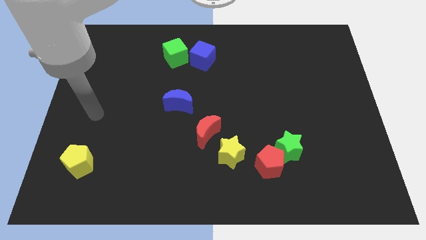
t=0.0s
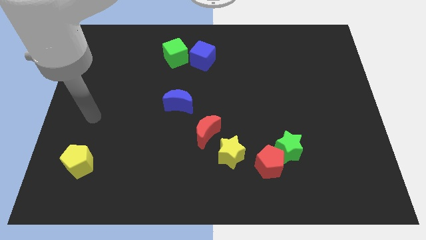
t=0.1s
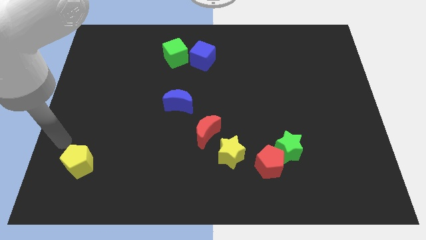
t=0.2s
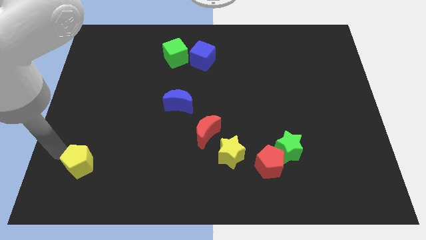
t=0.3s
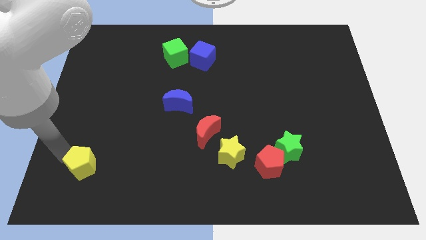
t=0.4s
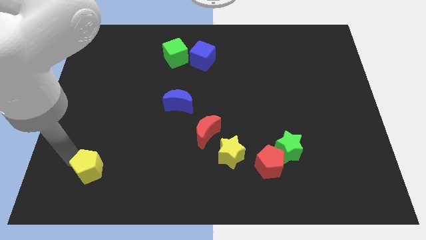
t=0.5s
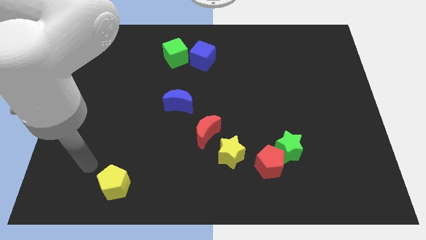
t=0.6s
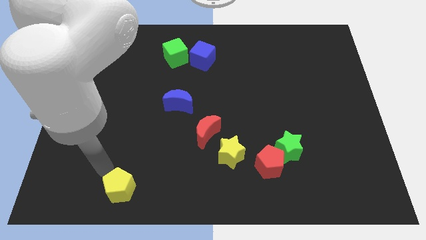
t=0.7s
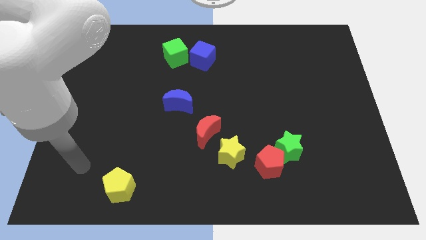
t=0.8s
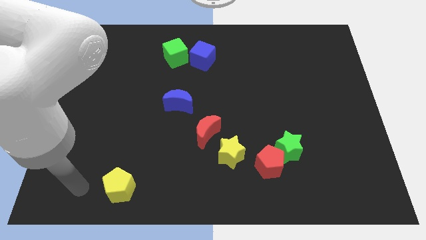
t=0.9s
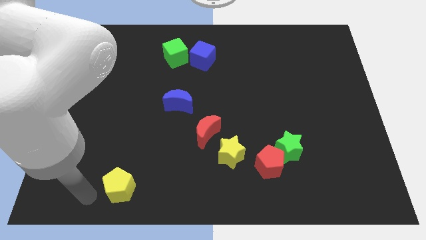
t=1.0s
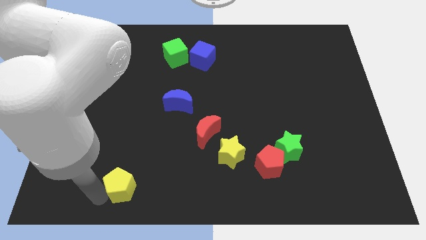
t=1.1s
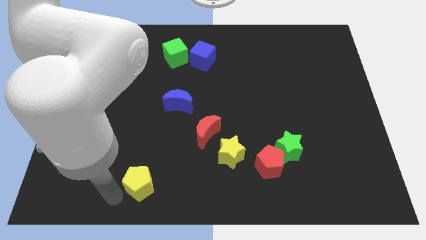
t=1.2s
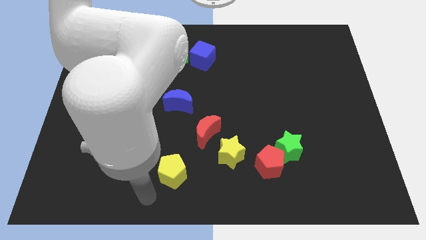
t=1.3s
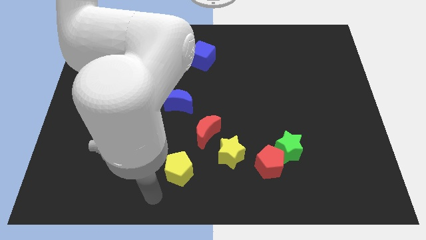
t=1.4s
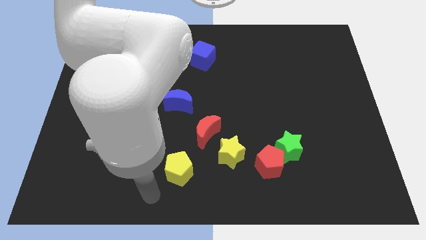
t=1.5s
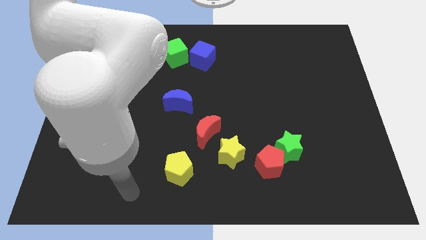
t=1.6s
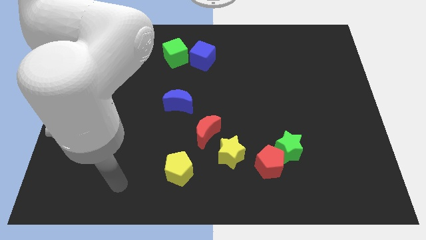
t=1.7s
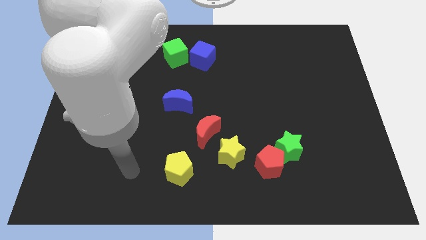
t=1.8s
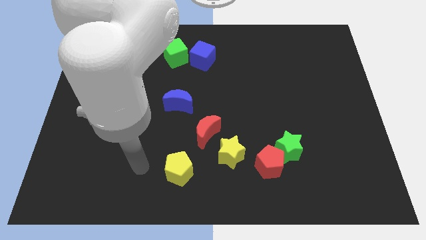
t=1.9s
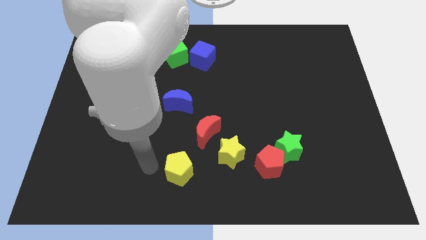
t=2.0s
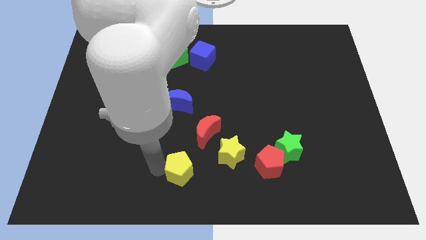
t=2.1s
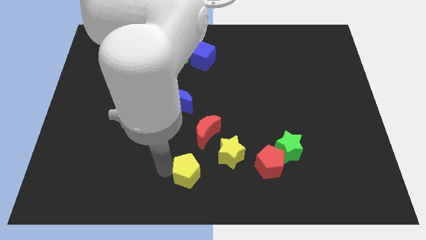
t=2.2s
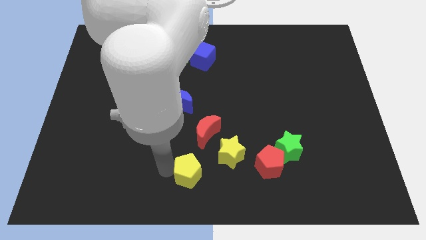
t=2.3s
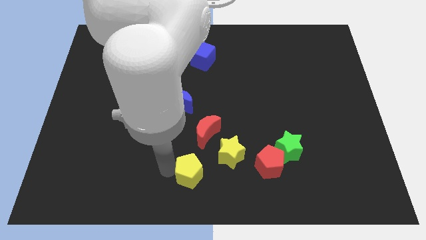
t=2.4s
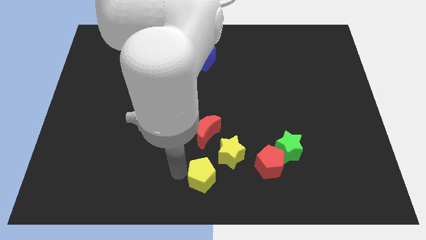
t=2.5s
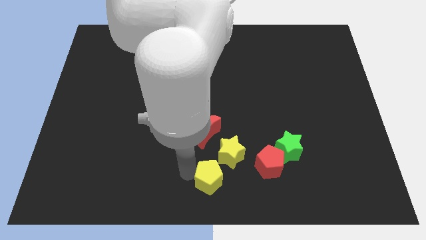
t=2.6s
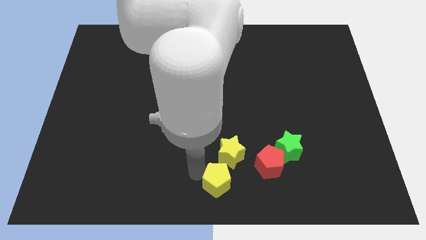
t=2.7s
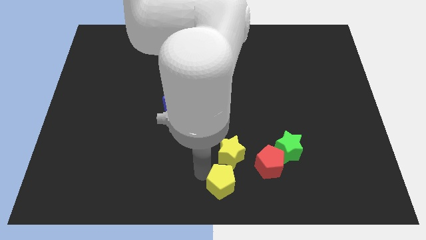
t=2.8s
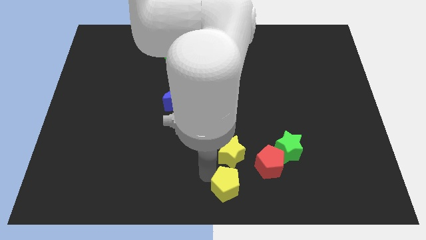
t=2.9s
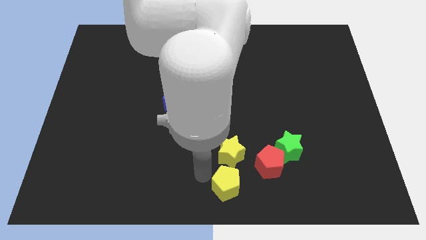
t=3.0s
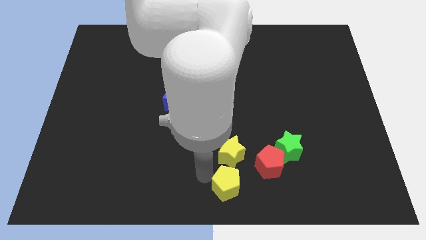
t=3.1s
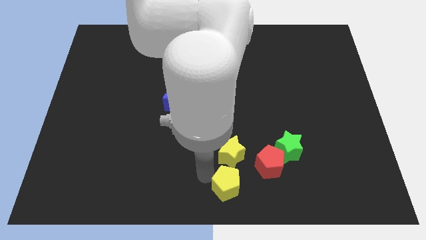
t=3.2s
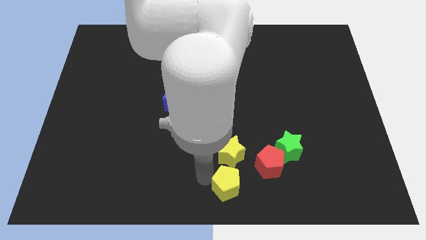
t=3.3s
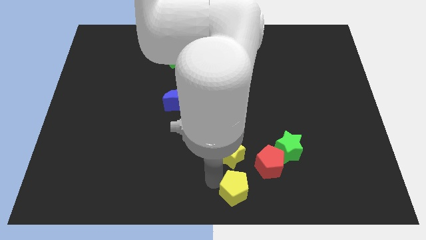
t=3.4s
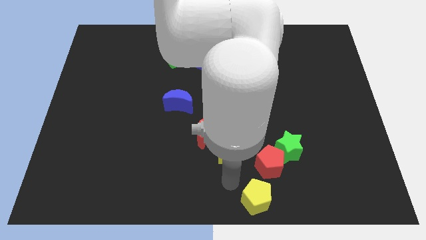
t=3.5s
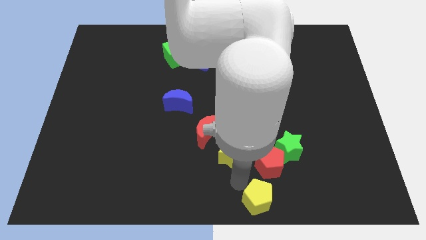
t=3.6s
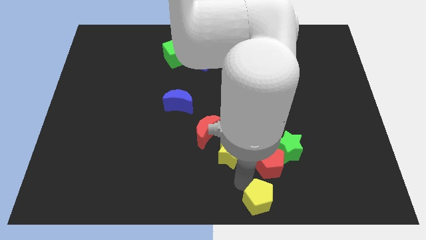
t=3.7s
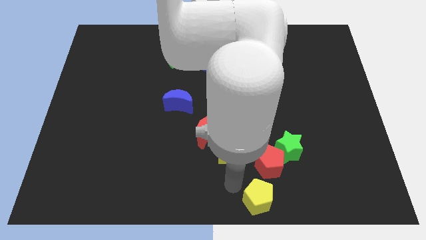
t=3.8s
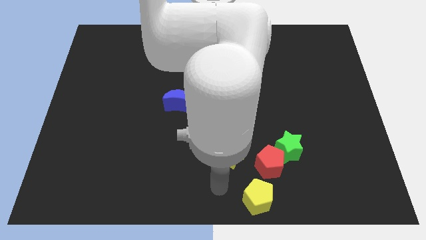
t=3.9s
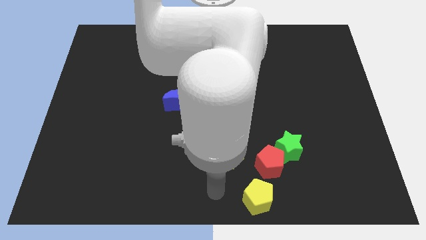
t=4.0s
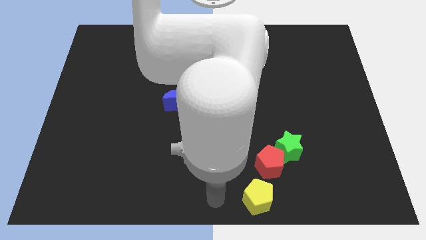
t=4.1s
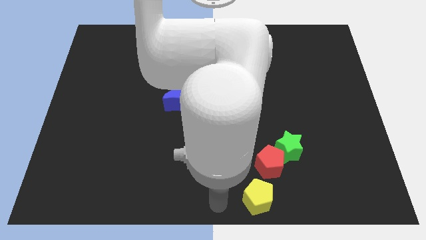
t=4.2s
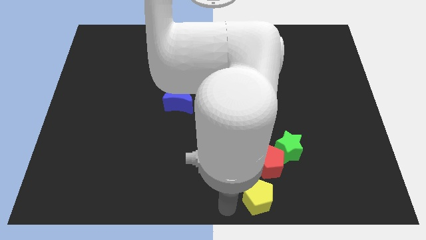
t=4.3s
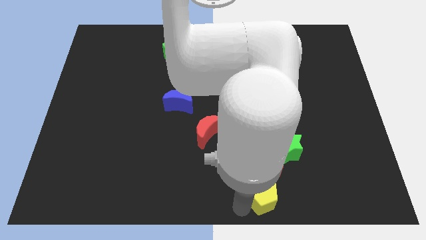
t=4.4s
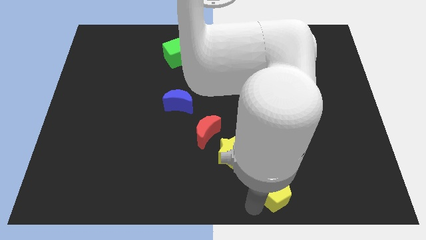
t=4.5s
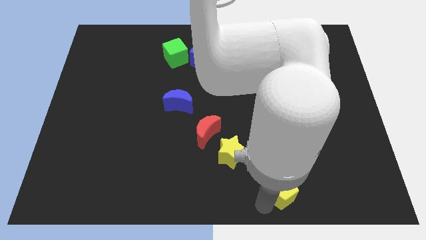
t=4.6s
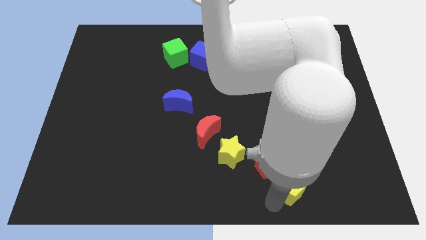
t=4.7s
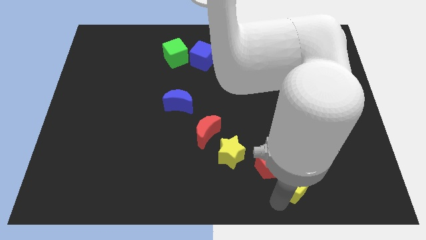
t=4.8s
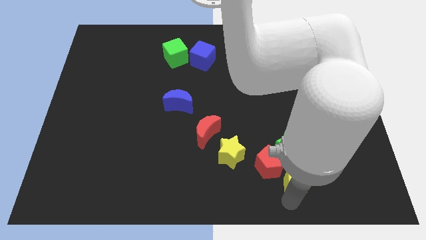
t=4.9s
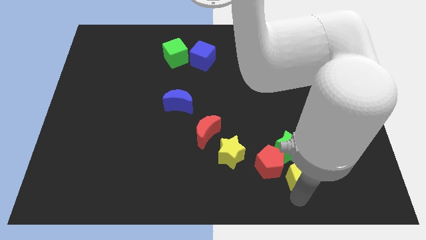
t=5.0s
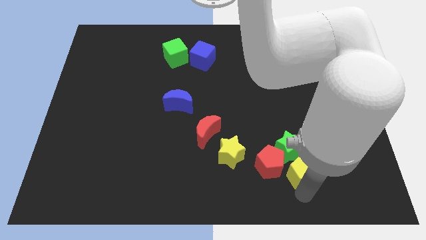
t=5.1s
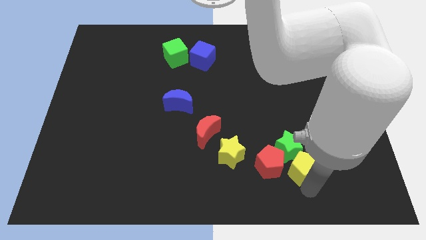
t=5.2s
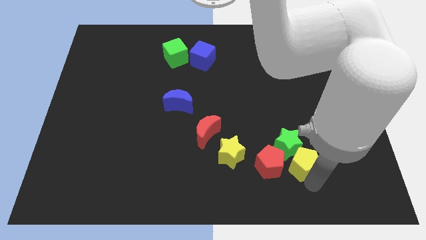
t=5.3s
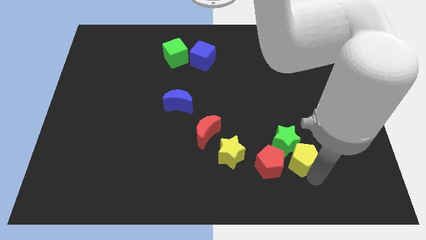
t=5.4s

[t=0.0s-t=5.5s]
move the yellow pentagon towards the green star

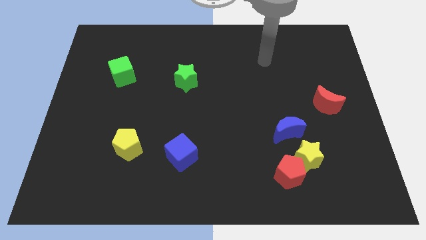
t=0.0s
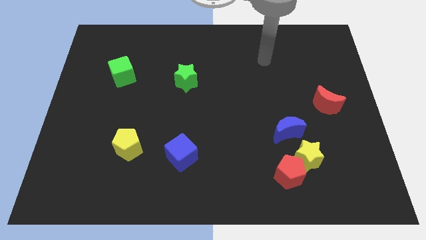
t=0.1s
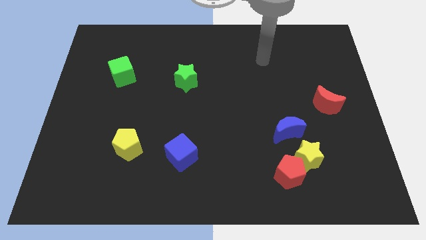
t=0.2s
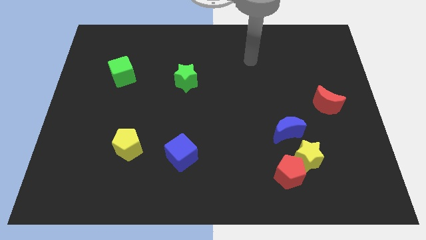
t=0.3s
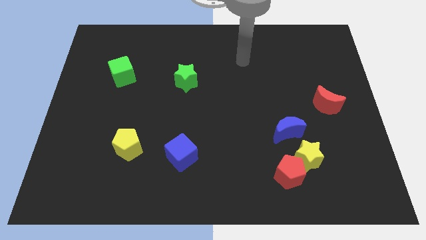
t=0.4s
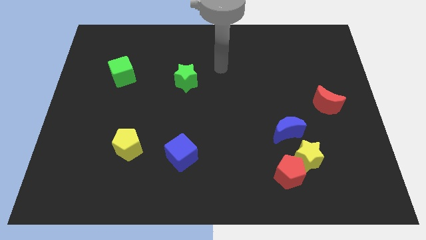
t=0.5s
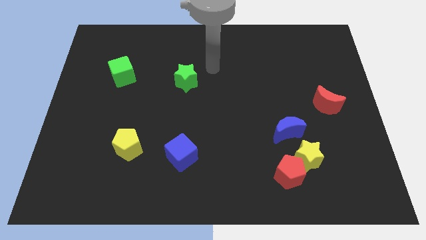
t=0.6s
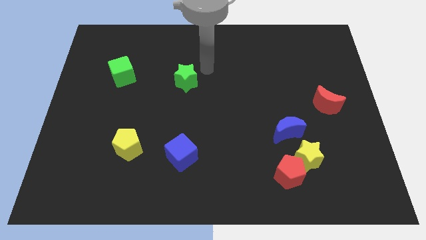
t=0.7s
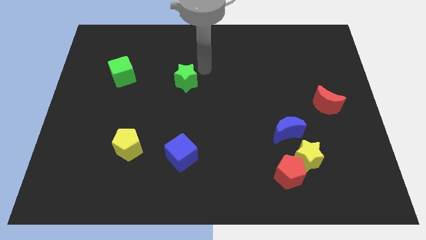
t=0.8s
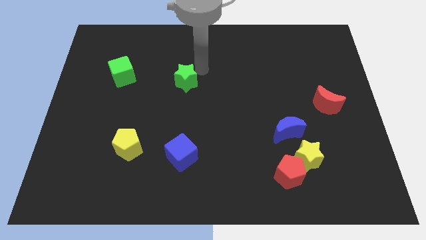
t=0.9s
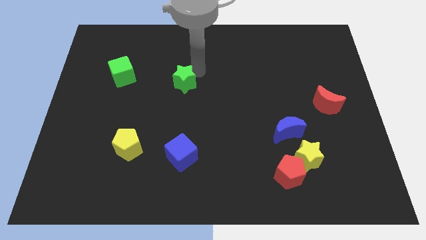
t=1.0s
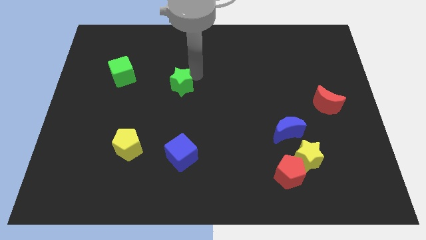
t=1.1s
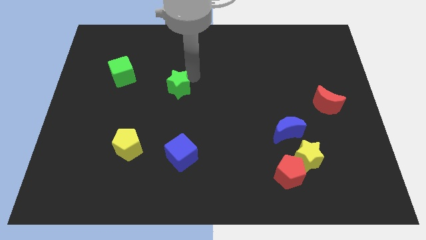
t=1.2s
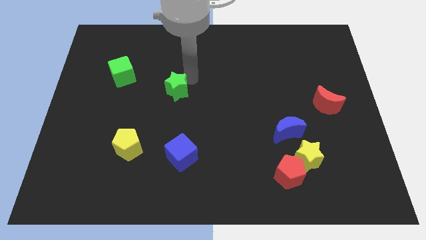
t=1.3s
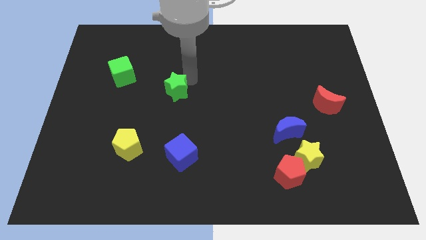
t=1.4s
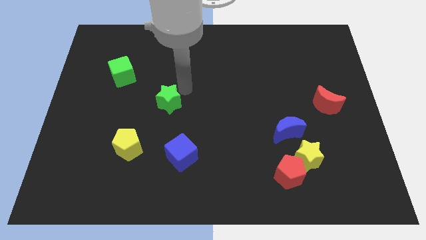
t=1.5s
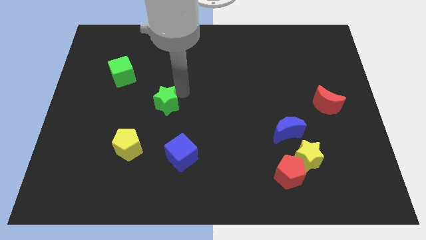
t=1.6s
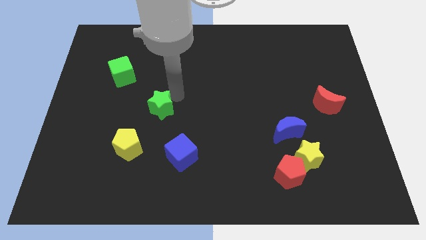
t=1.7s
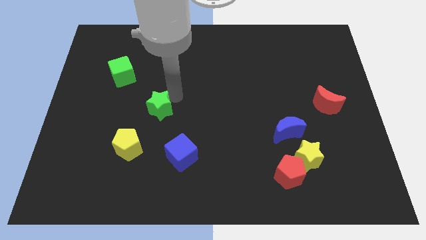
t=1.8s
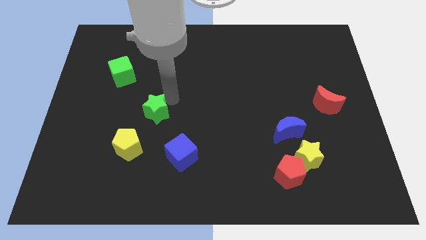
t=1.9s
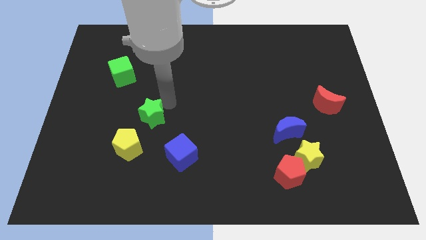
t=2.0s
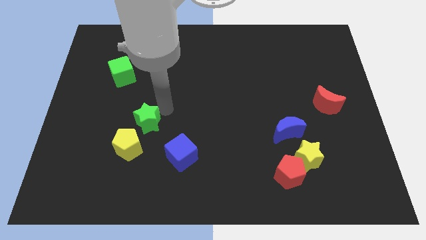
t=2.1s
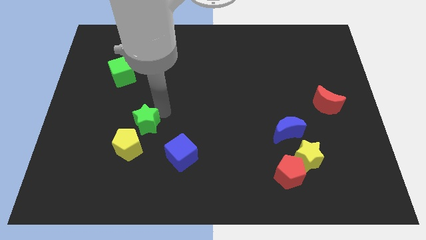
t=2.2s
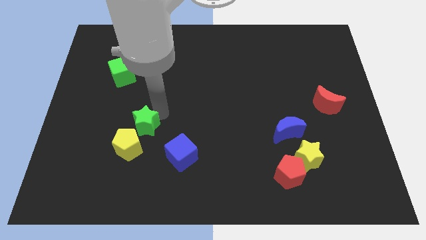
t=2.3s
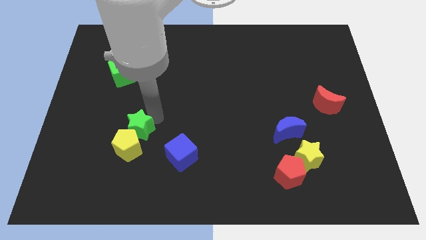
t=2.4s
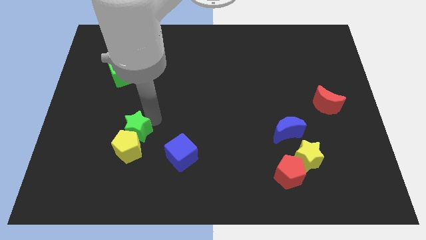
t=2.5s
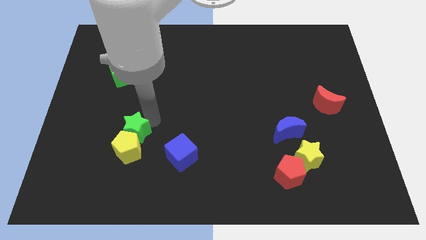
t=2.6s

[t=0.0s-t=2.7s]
slide the green star next to the yellow pentagon

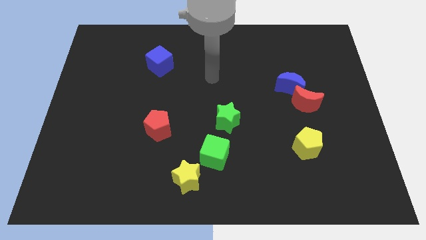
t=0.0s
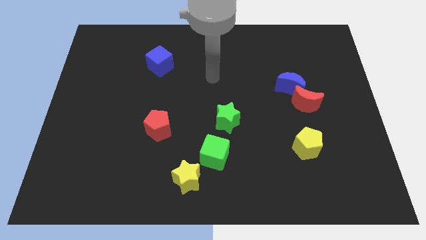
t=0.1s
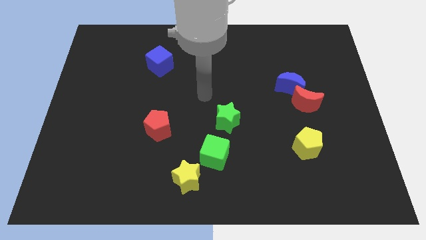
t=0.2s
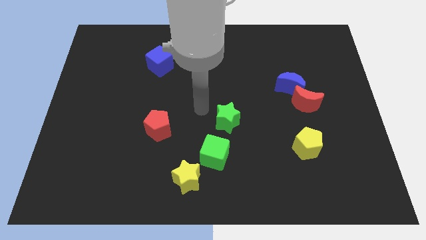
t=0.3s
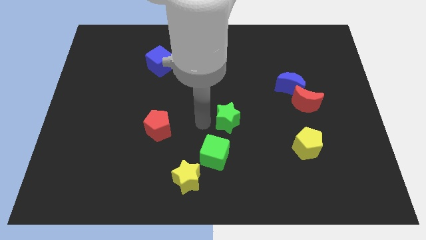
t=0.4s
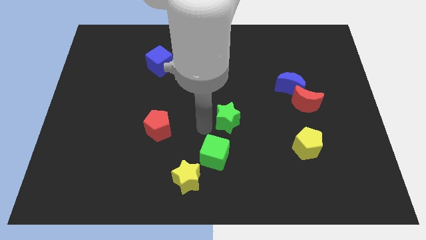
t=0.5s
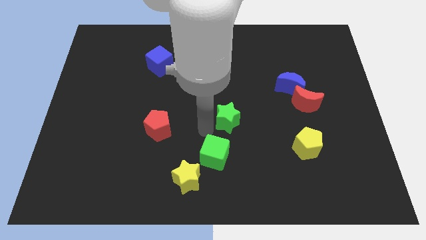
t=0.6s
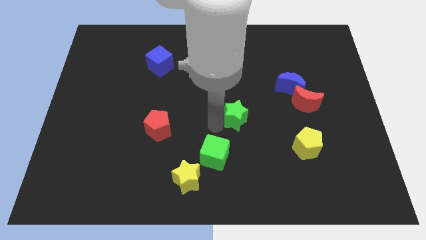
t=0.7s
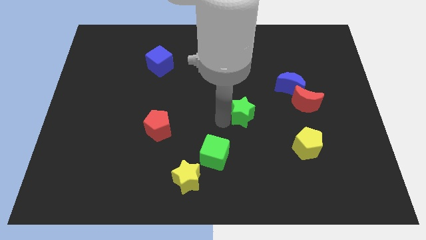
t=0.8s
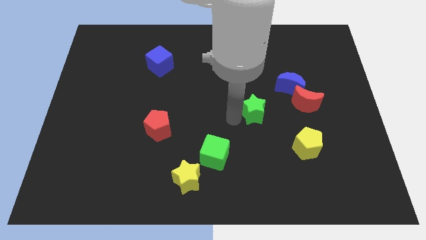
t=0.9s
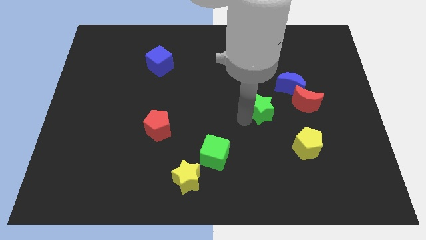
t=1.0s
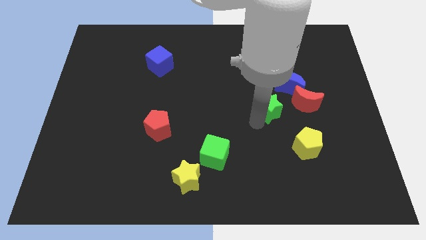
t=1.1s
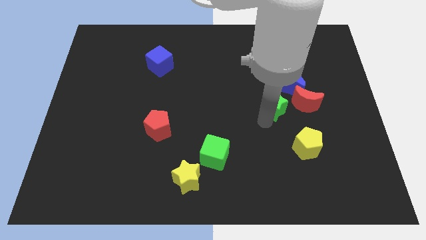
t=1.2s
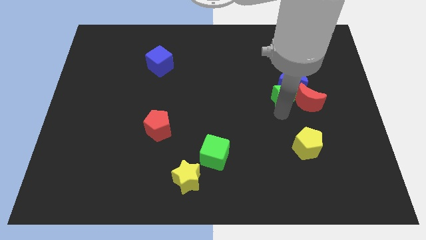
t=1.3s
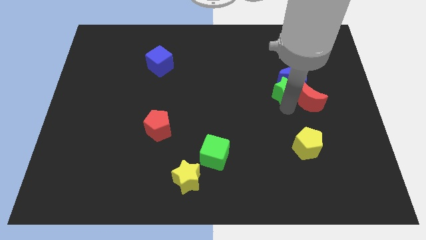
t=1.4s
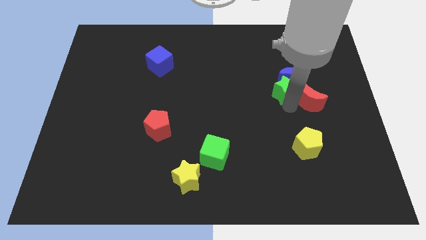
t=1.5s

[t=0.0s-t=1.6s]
move the green star close to the red moon
